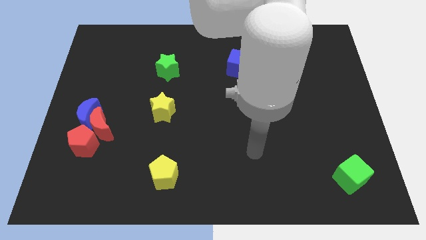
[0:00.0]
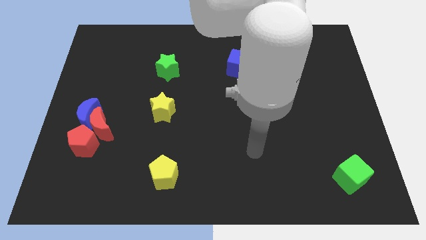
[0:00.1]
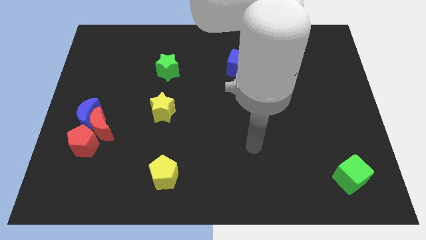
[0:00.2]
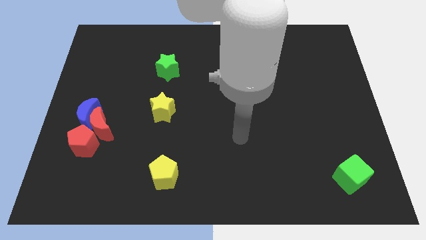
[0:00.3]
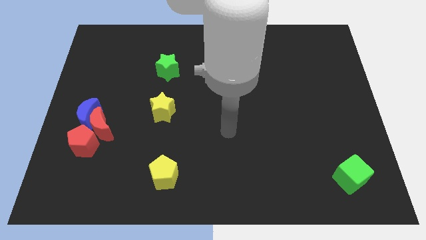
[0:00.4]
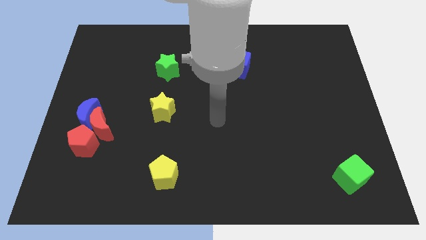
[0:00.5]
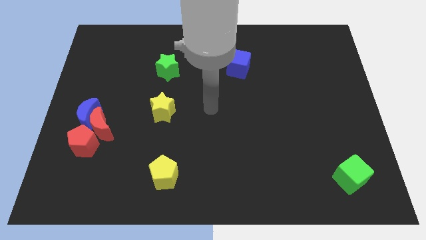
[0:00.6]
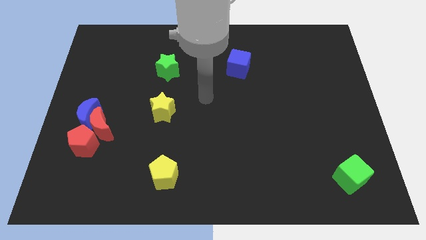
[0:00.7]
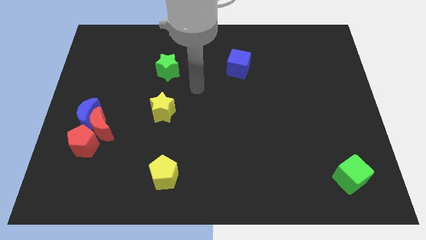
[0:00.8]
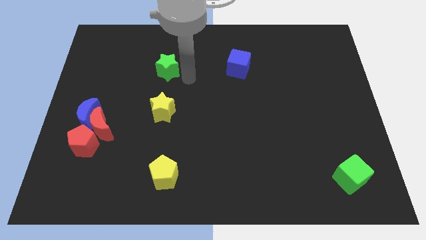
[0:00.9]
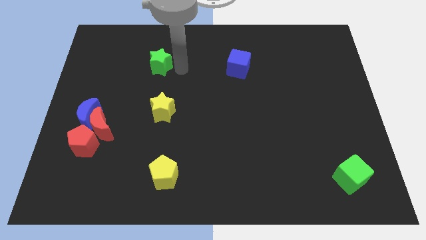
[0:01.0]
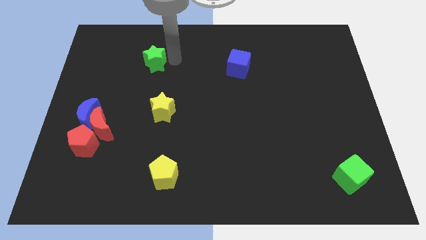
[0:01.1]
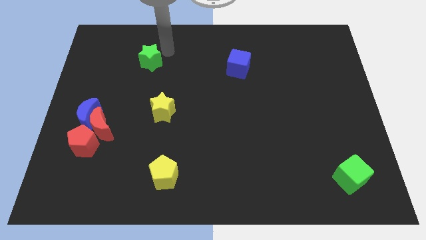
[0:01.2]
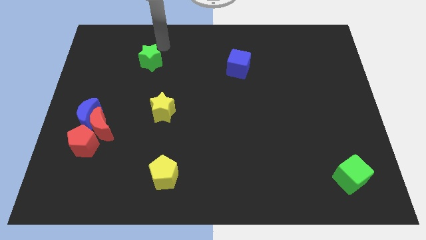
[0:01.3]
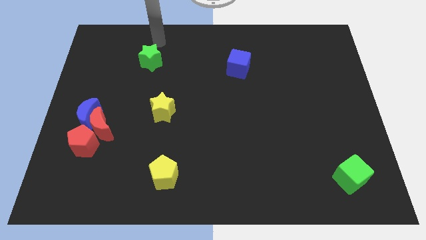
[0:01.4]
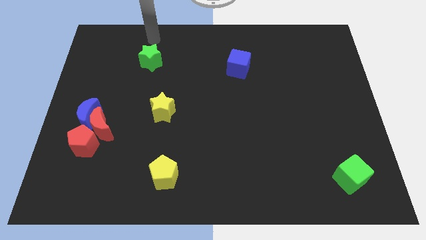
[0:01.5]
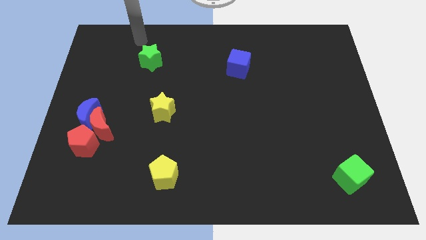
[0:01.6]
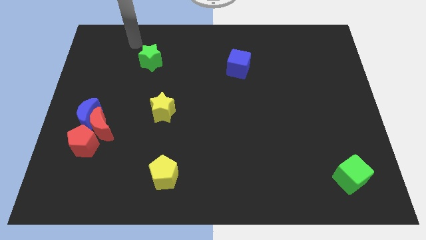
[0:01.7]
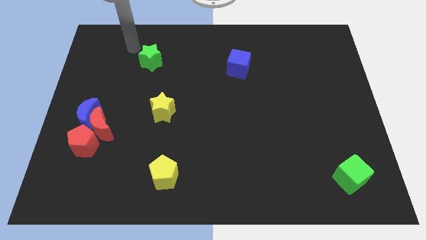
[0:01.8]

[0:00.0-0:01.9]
move the arm to the green star

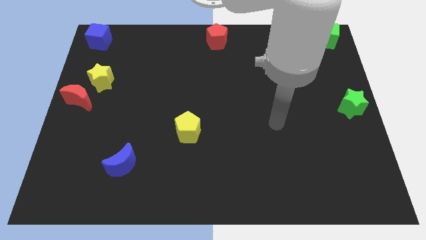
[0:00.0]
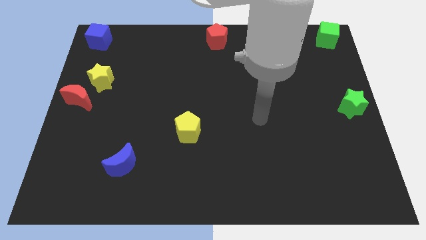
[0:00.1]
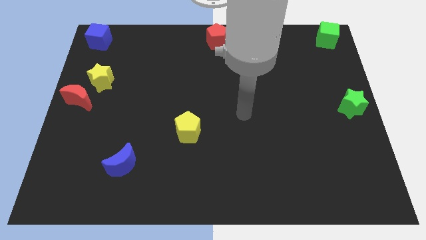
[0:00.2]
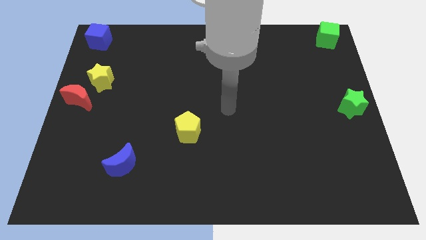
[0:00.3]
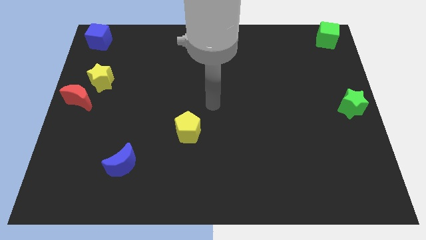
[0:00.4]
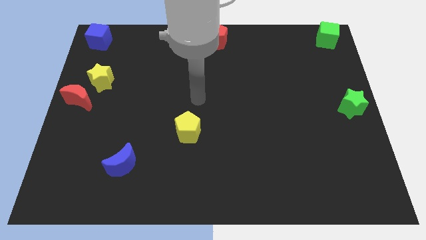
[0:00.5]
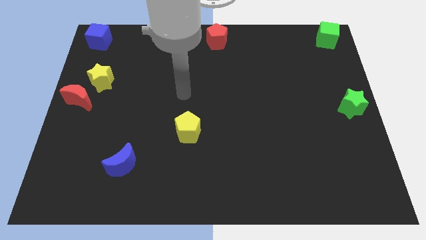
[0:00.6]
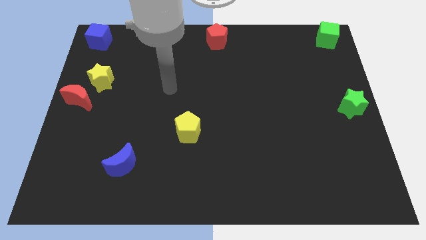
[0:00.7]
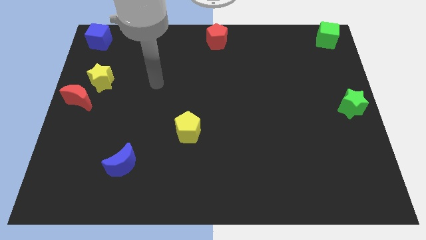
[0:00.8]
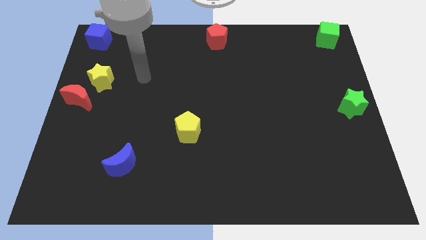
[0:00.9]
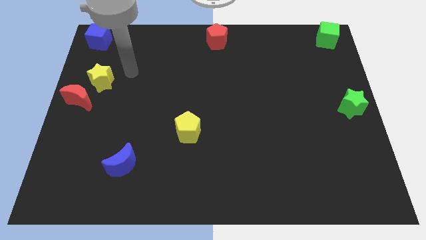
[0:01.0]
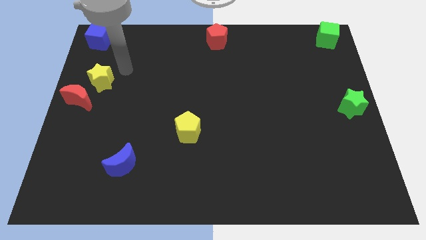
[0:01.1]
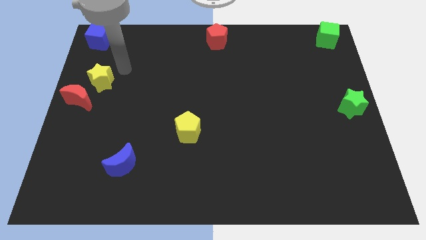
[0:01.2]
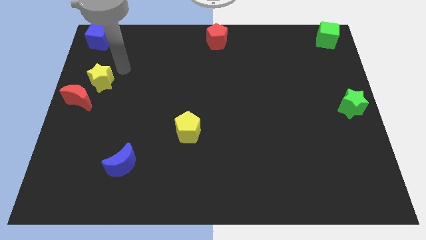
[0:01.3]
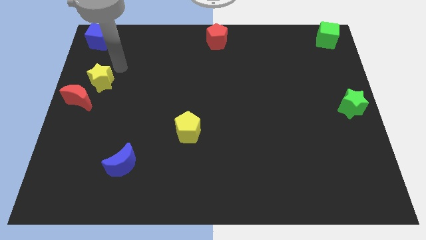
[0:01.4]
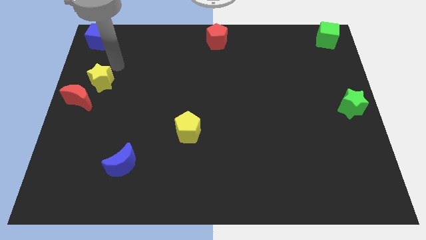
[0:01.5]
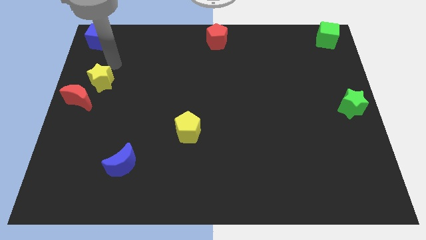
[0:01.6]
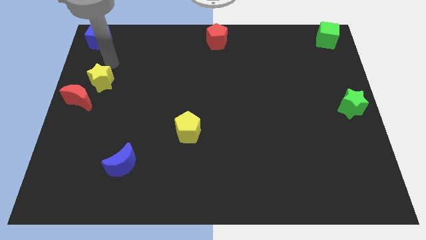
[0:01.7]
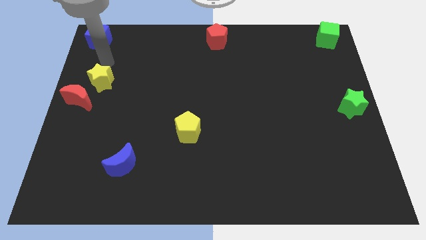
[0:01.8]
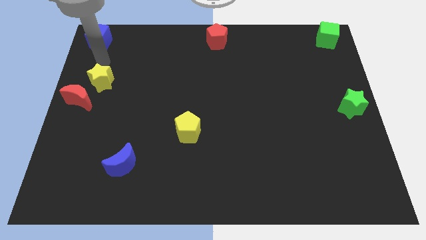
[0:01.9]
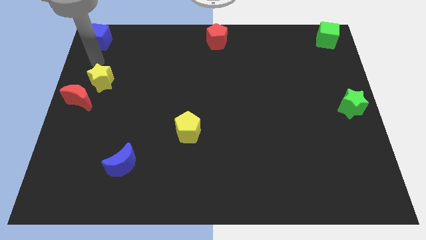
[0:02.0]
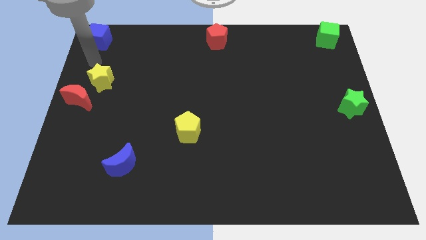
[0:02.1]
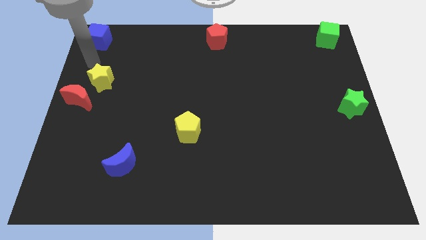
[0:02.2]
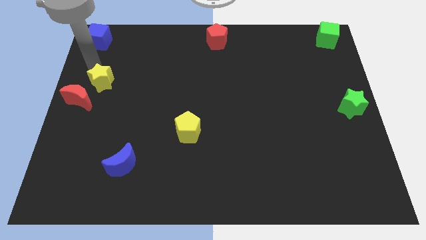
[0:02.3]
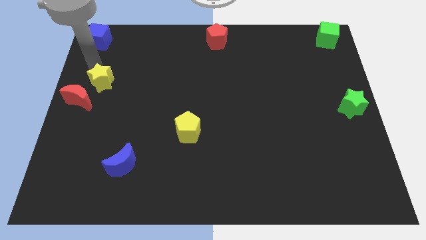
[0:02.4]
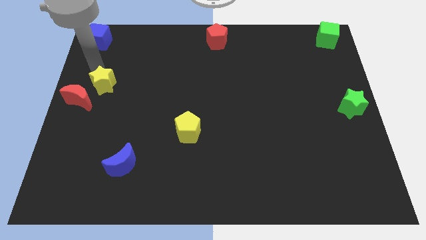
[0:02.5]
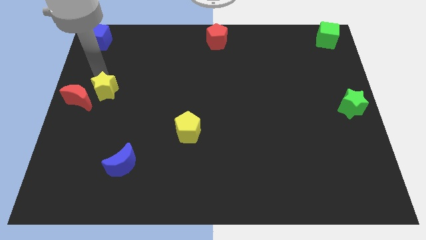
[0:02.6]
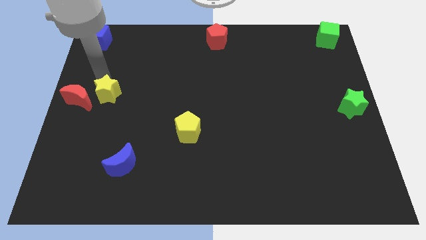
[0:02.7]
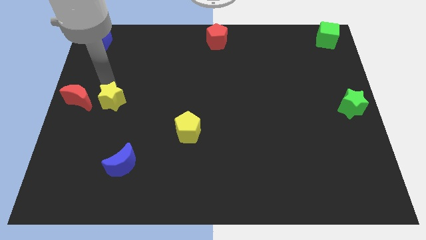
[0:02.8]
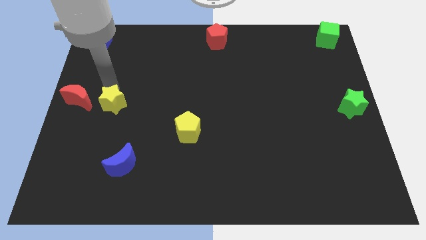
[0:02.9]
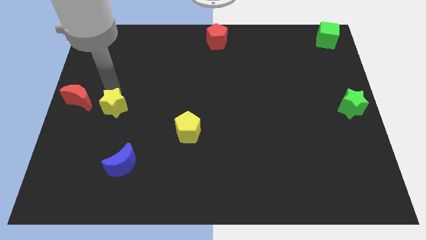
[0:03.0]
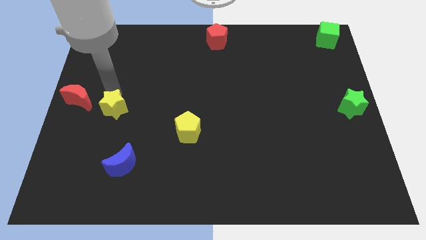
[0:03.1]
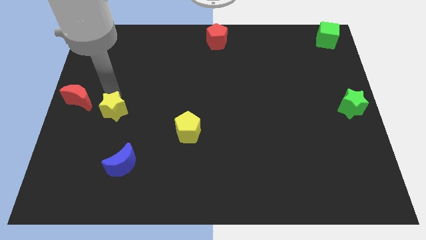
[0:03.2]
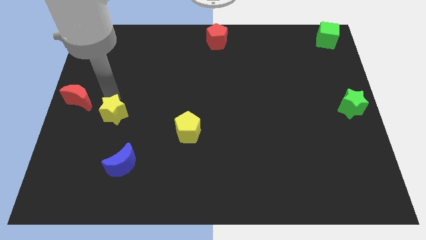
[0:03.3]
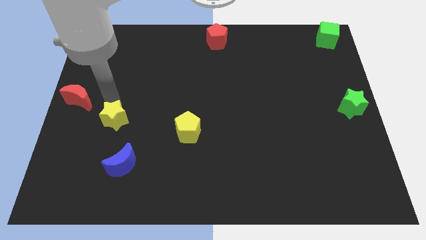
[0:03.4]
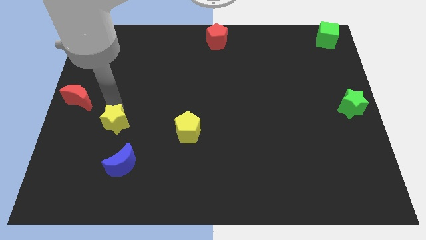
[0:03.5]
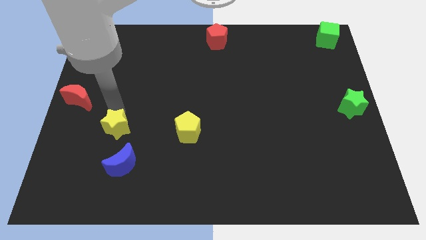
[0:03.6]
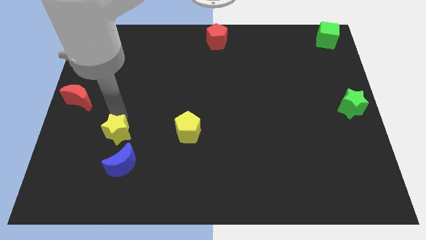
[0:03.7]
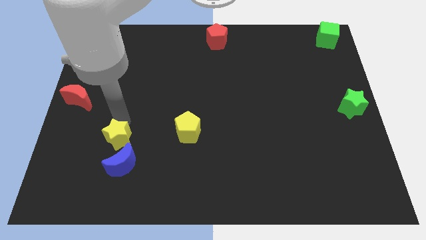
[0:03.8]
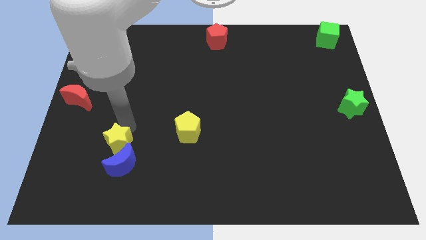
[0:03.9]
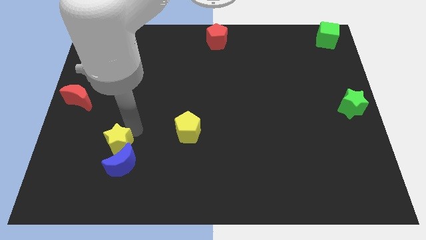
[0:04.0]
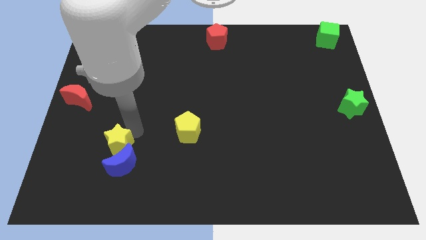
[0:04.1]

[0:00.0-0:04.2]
put the yellow star at the top side of the blue moon

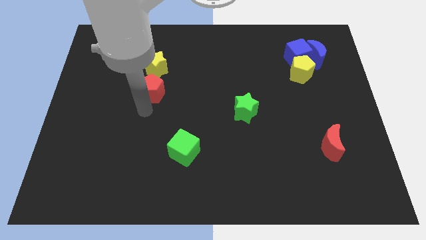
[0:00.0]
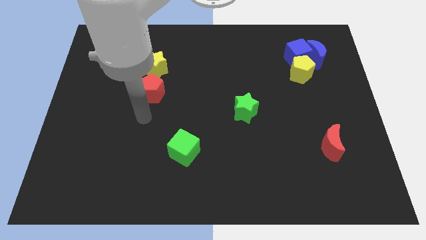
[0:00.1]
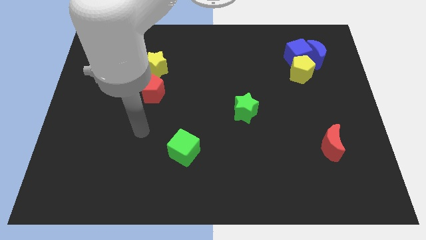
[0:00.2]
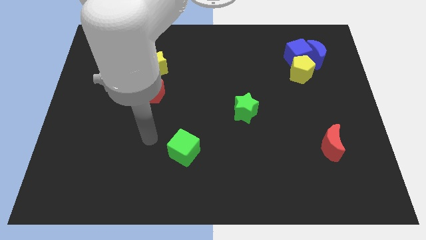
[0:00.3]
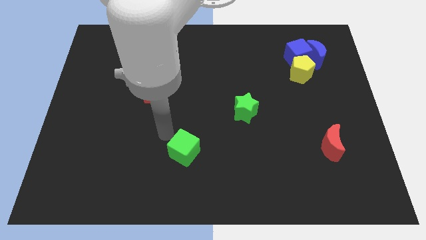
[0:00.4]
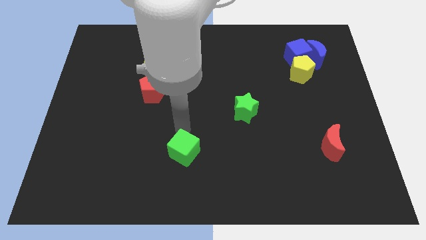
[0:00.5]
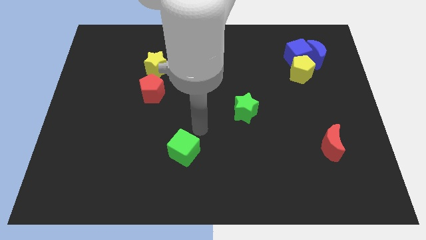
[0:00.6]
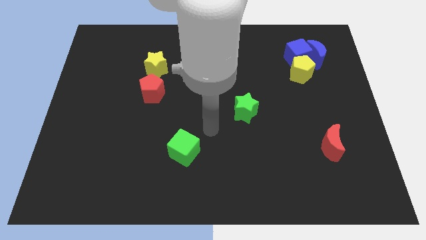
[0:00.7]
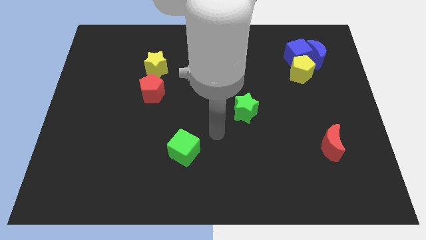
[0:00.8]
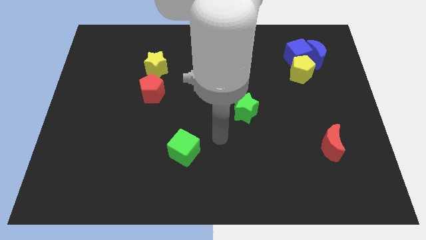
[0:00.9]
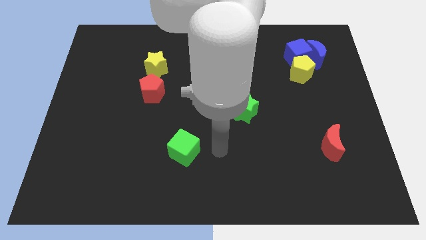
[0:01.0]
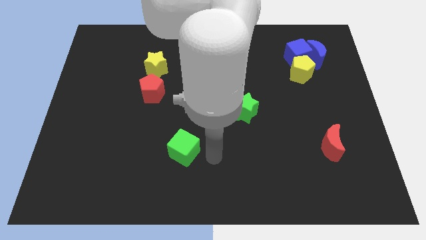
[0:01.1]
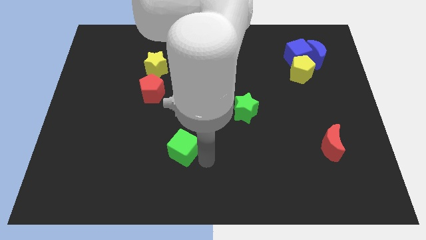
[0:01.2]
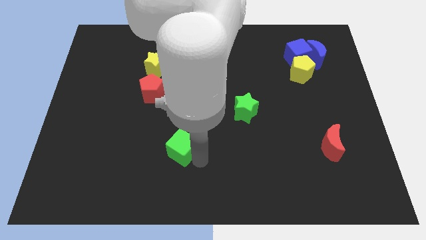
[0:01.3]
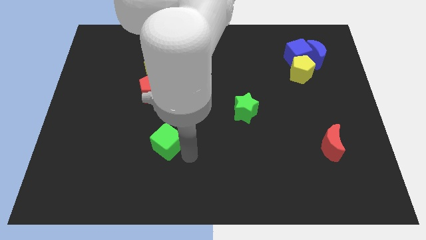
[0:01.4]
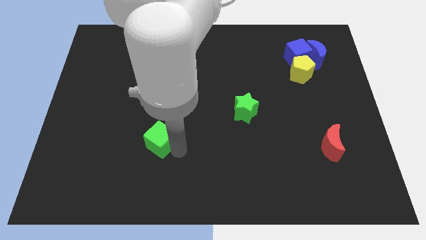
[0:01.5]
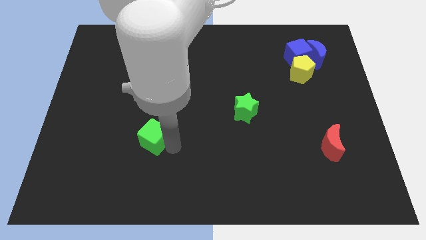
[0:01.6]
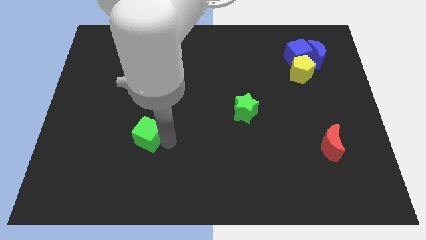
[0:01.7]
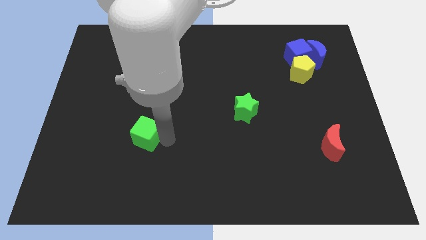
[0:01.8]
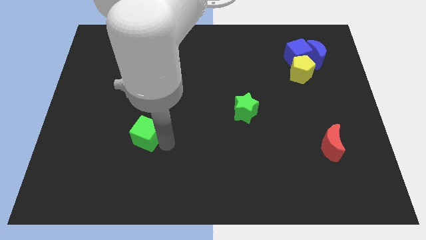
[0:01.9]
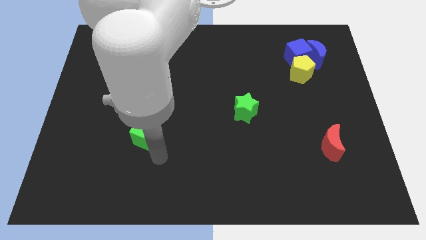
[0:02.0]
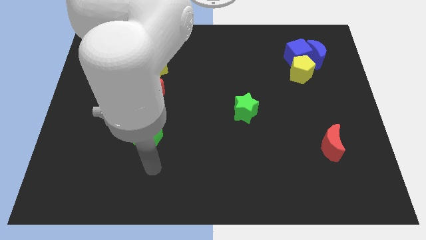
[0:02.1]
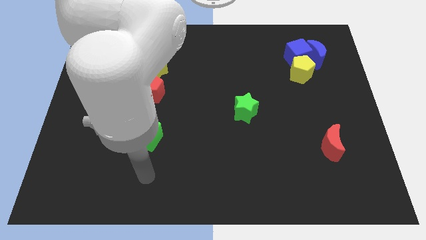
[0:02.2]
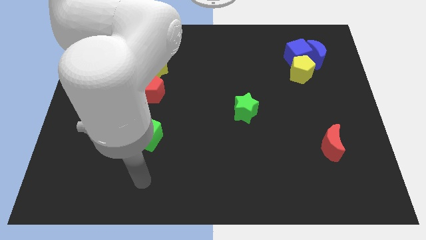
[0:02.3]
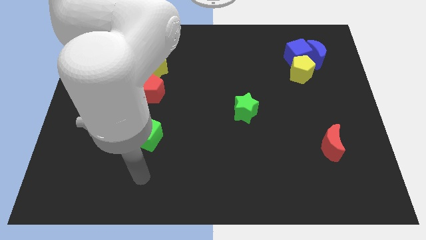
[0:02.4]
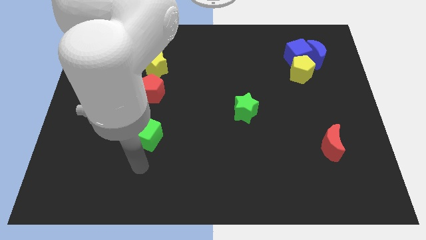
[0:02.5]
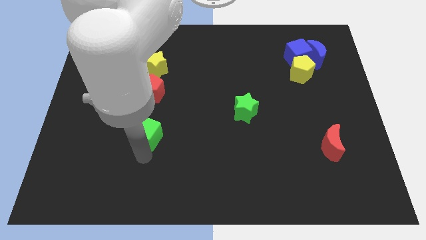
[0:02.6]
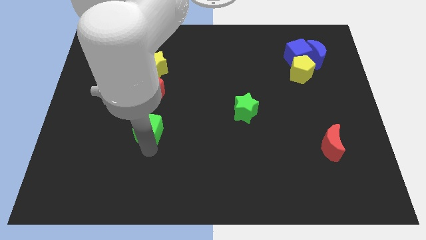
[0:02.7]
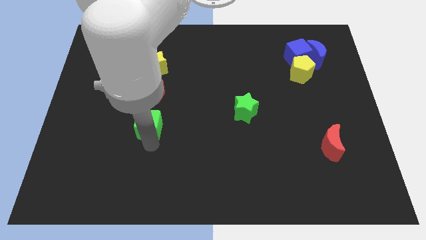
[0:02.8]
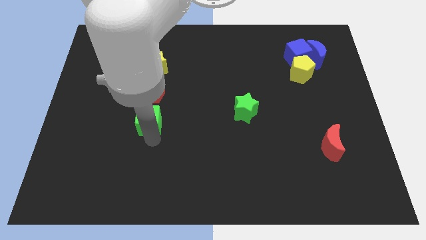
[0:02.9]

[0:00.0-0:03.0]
push the green cube to the bottom of the red pentagon

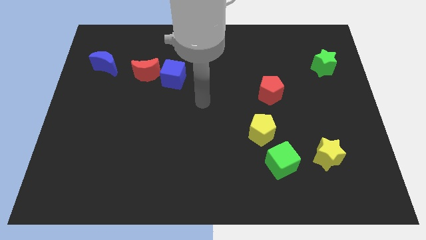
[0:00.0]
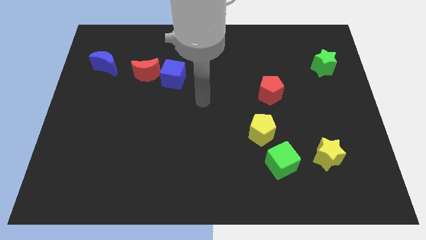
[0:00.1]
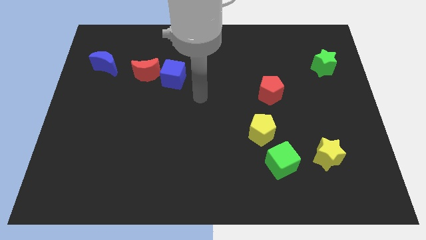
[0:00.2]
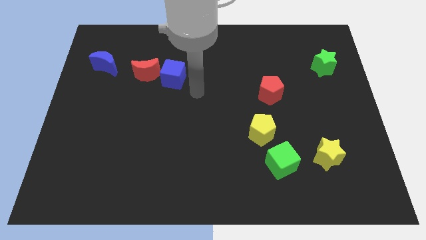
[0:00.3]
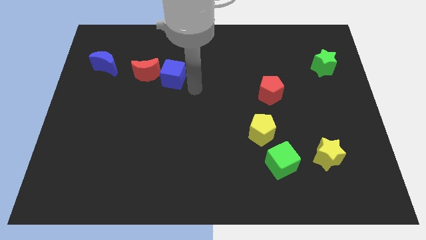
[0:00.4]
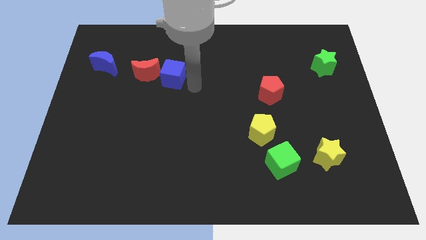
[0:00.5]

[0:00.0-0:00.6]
push the blue cube into the red moon
